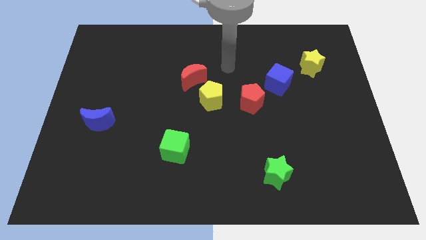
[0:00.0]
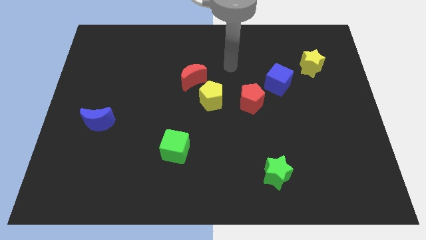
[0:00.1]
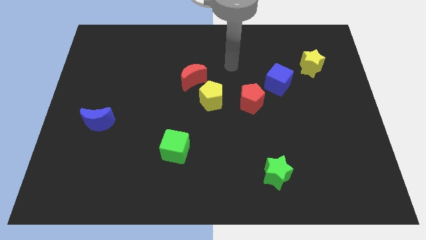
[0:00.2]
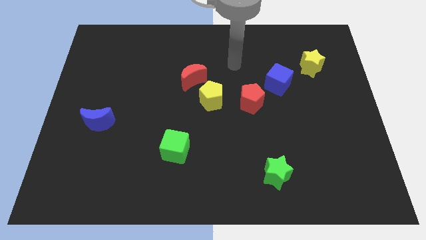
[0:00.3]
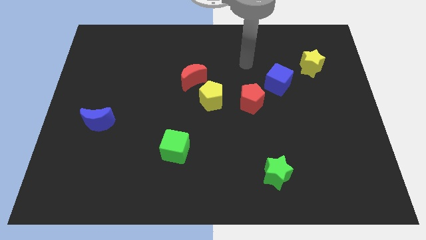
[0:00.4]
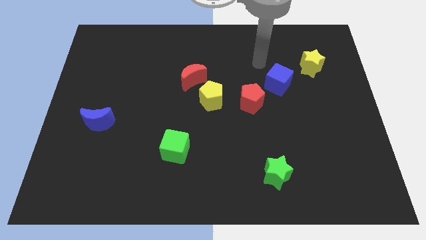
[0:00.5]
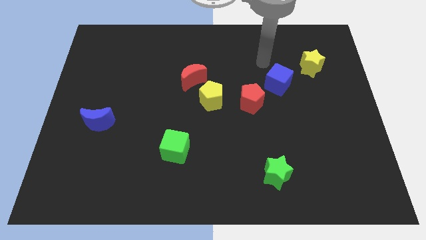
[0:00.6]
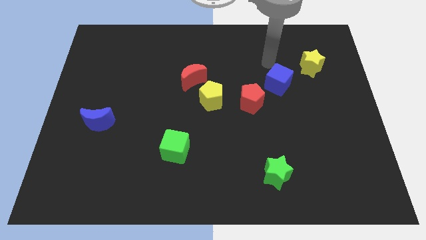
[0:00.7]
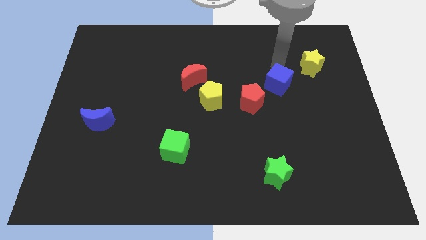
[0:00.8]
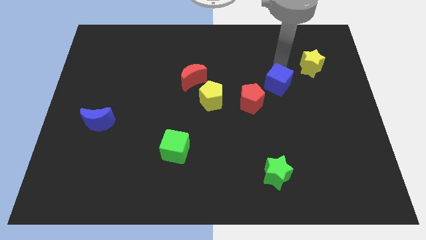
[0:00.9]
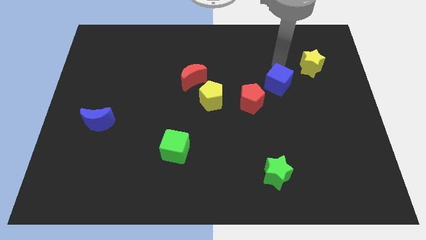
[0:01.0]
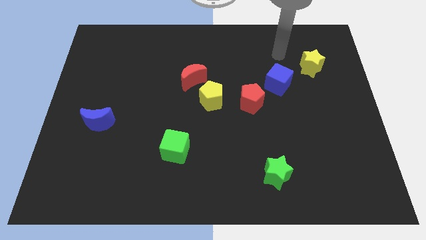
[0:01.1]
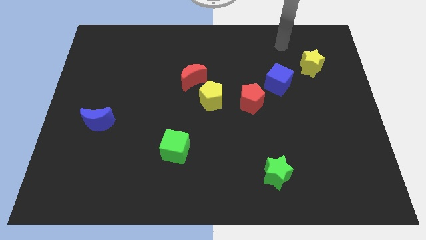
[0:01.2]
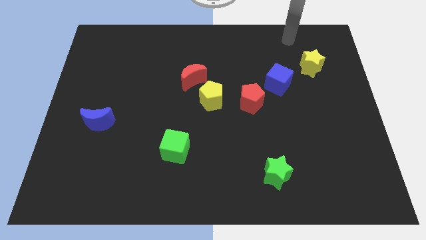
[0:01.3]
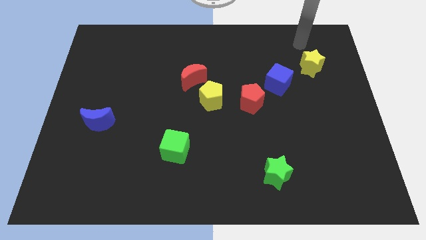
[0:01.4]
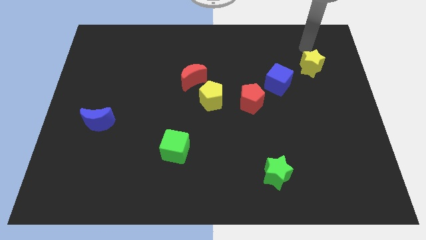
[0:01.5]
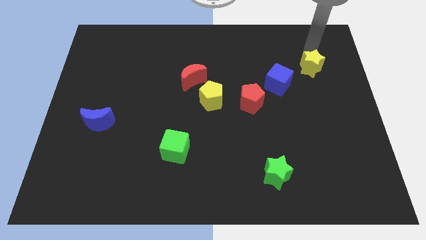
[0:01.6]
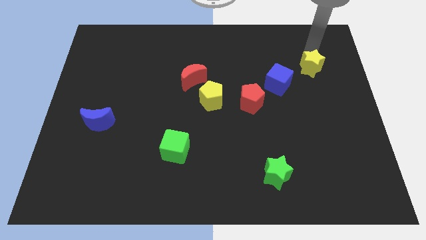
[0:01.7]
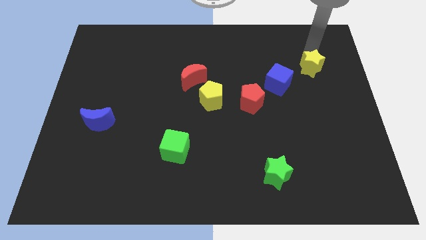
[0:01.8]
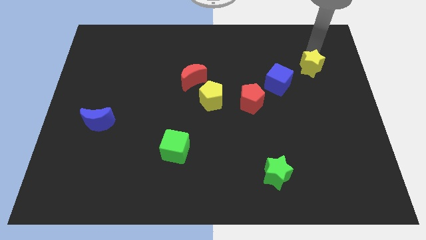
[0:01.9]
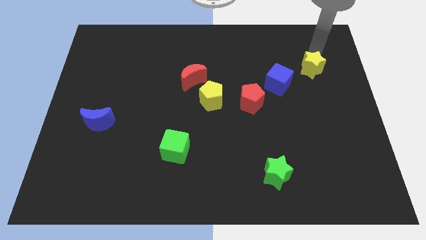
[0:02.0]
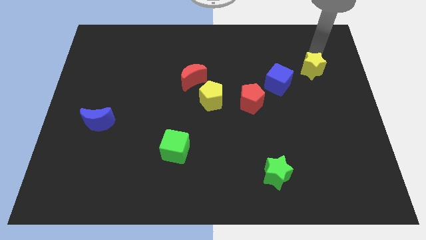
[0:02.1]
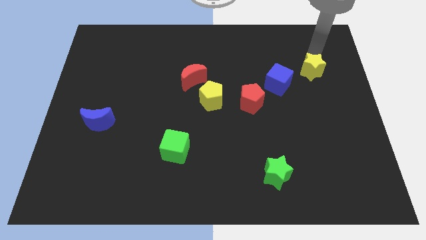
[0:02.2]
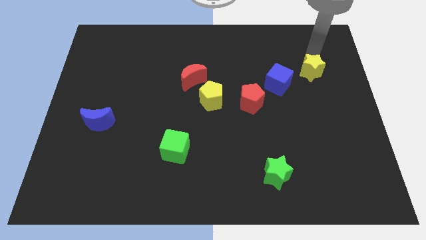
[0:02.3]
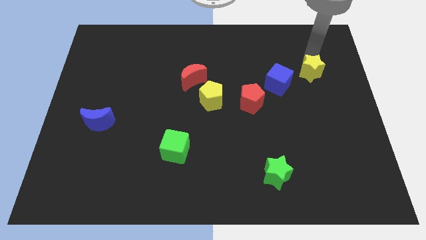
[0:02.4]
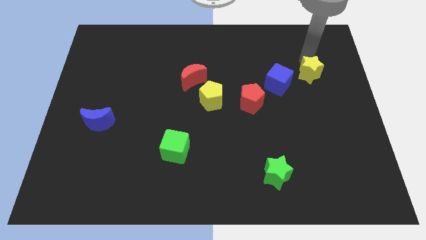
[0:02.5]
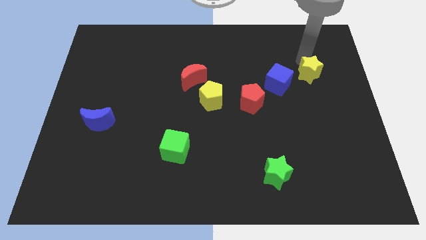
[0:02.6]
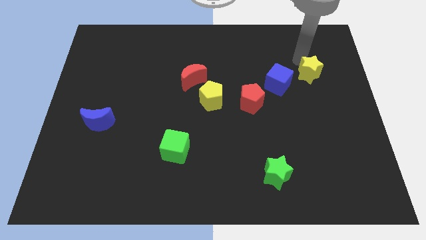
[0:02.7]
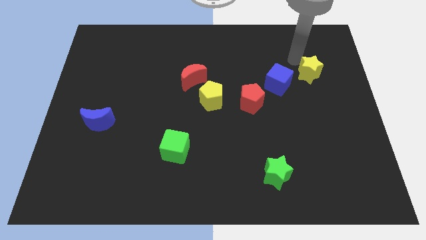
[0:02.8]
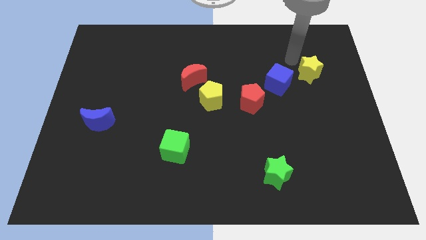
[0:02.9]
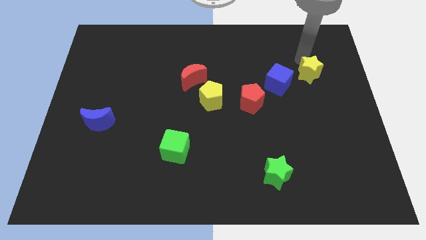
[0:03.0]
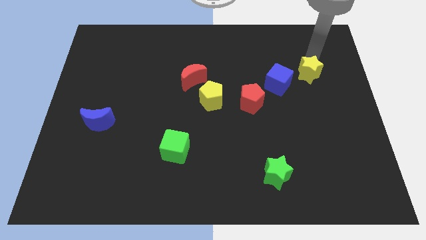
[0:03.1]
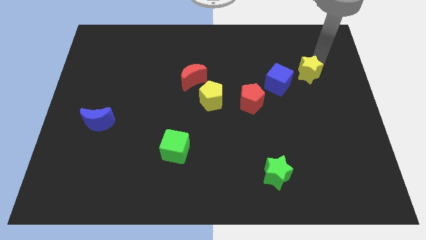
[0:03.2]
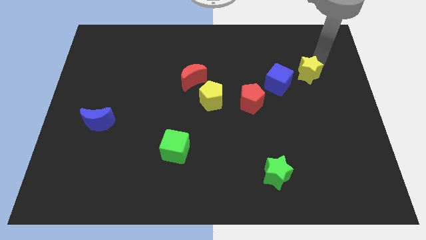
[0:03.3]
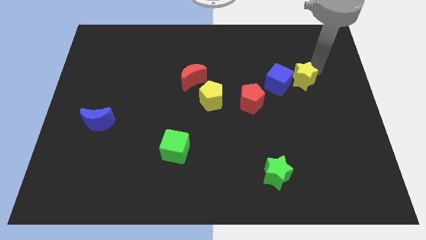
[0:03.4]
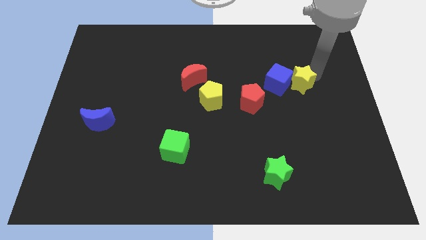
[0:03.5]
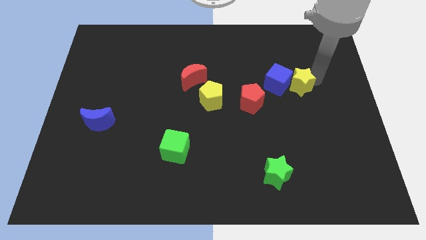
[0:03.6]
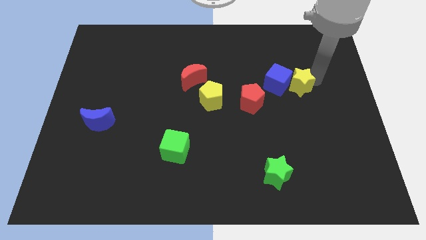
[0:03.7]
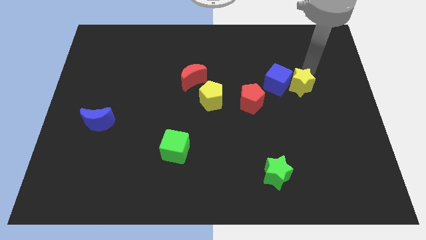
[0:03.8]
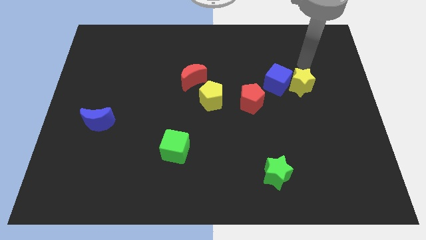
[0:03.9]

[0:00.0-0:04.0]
place the yellow star right to the blue cube

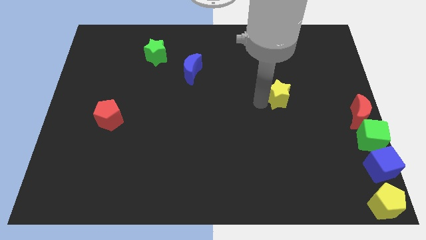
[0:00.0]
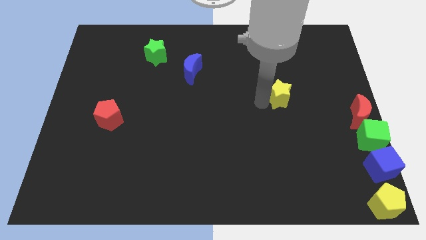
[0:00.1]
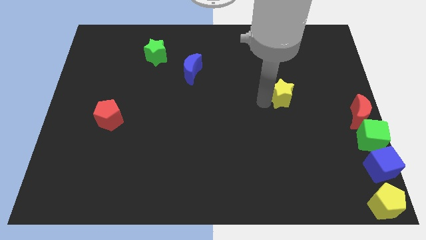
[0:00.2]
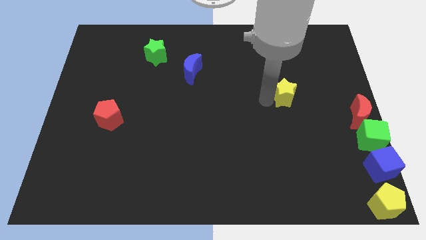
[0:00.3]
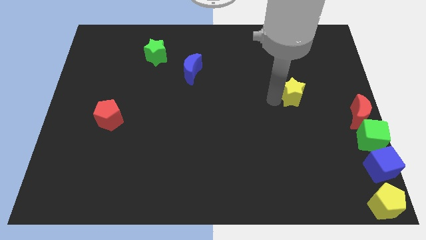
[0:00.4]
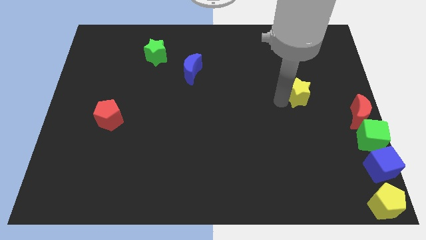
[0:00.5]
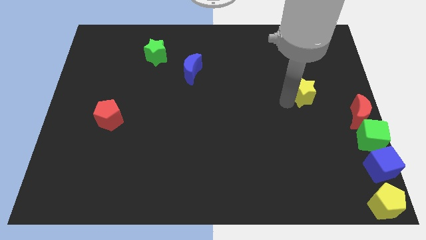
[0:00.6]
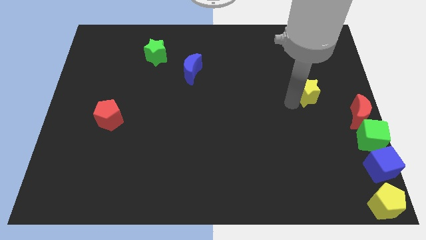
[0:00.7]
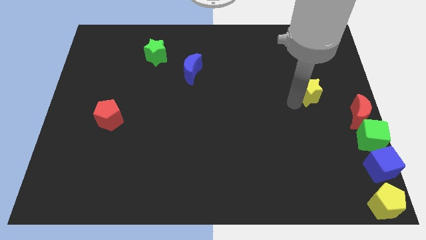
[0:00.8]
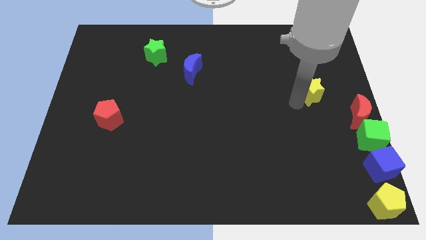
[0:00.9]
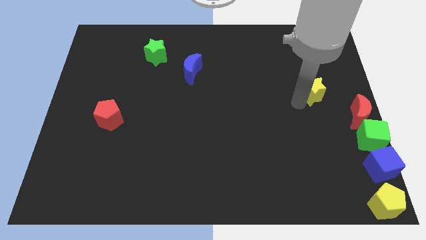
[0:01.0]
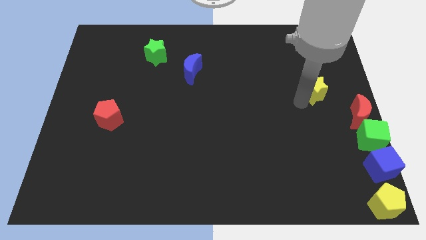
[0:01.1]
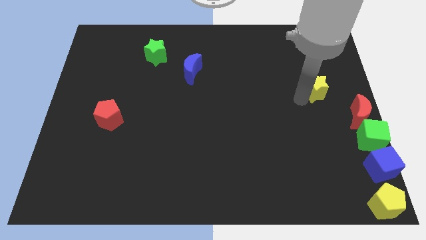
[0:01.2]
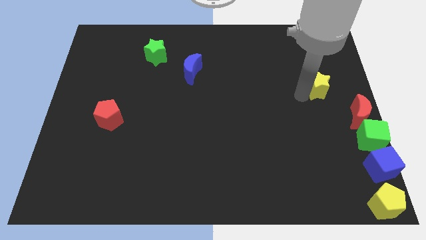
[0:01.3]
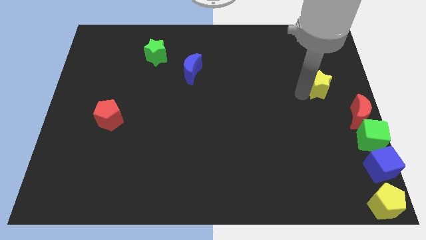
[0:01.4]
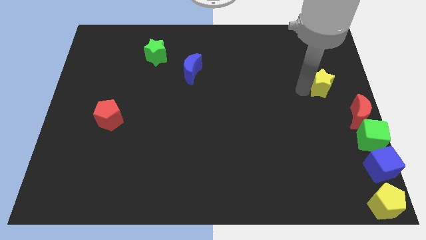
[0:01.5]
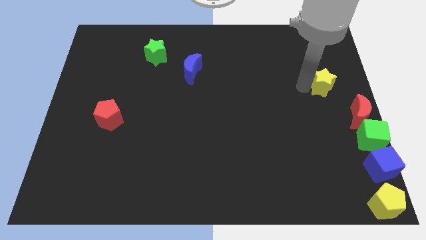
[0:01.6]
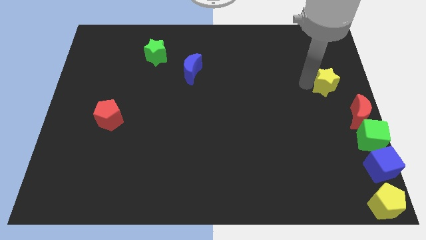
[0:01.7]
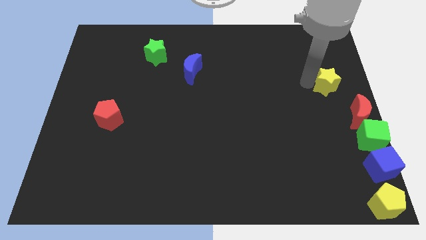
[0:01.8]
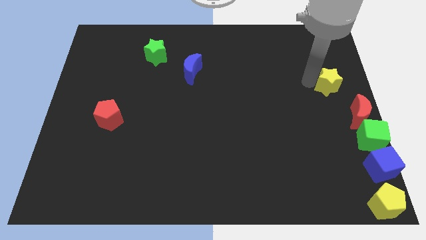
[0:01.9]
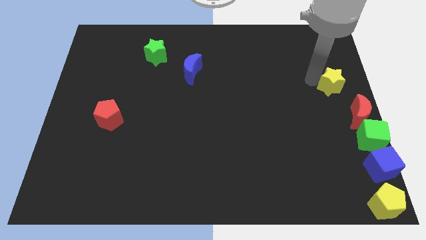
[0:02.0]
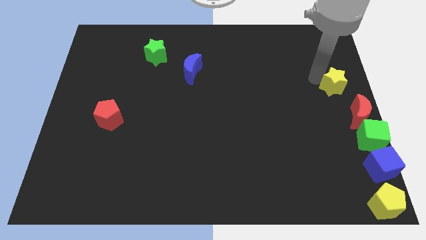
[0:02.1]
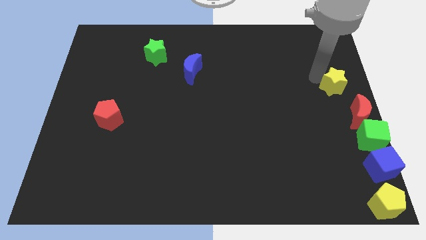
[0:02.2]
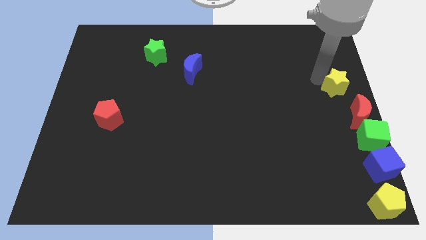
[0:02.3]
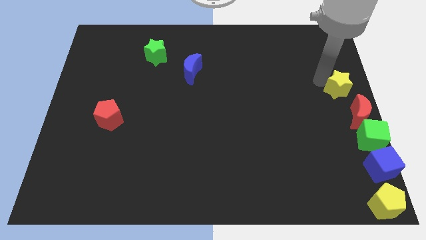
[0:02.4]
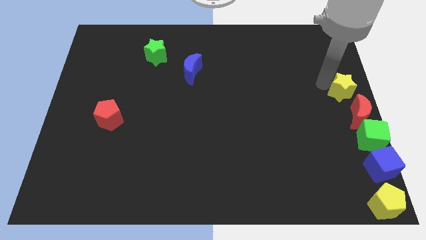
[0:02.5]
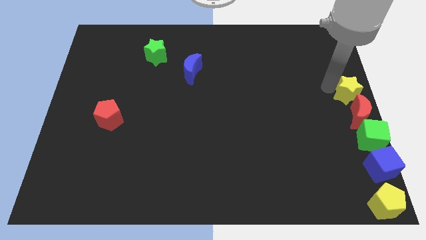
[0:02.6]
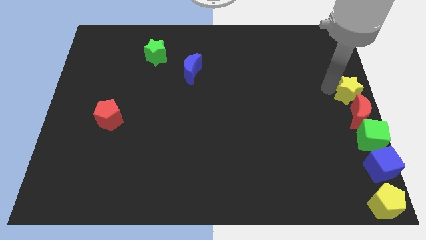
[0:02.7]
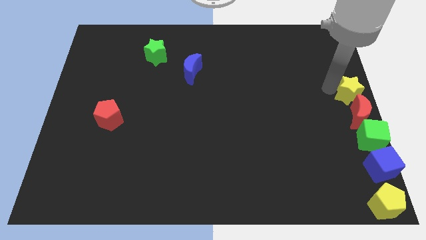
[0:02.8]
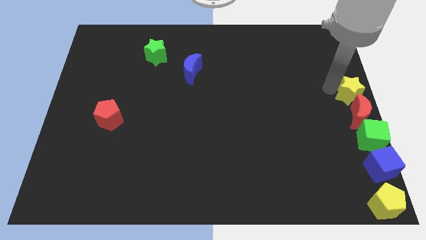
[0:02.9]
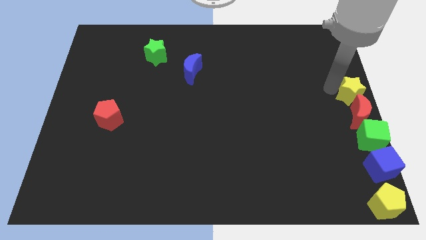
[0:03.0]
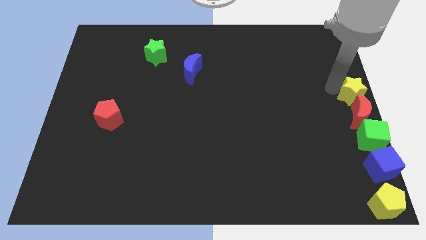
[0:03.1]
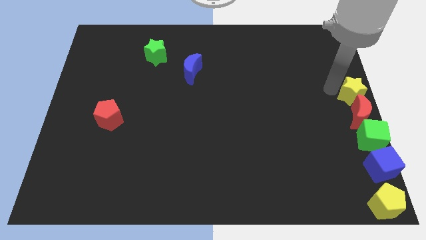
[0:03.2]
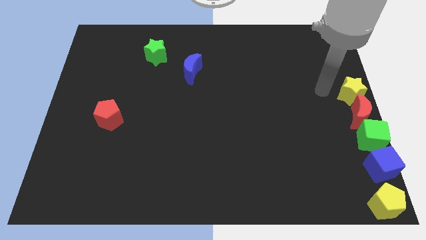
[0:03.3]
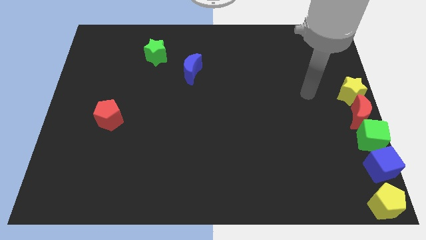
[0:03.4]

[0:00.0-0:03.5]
place the yellow star at the top of the red crescent

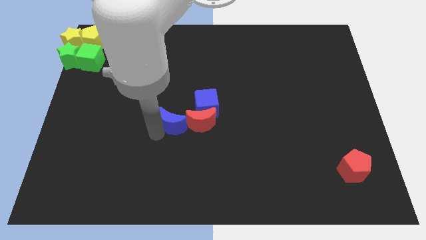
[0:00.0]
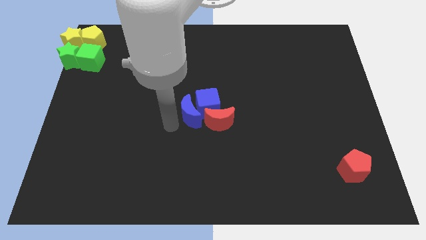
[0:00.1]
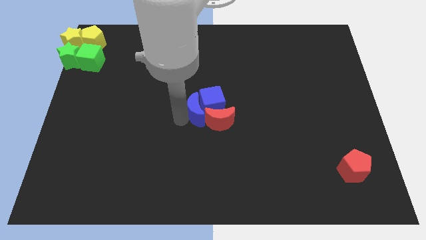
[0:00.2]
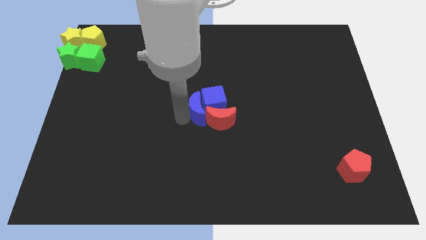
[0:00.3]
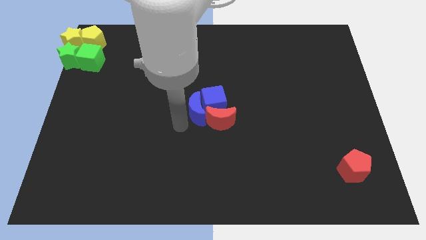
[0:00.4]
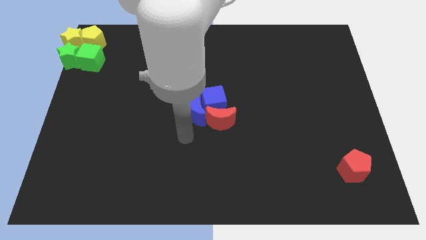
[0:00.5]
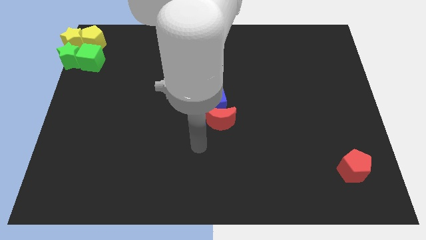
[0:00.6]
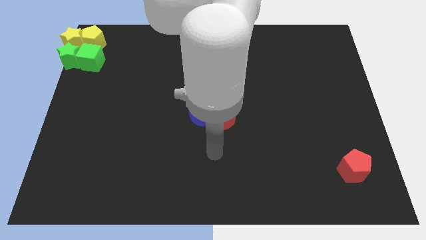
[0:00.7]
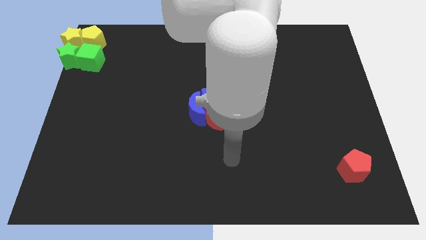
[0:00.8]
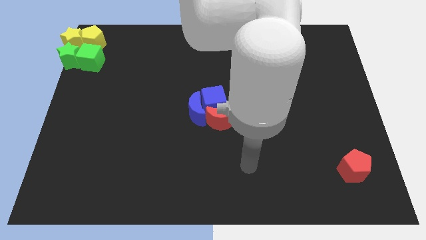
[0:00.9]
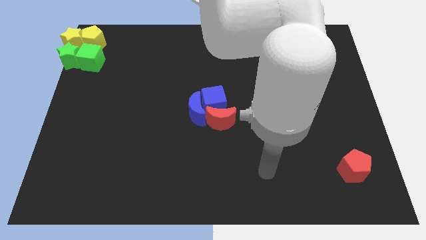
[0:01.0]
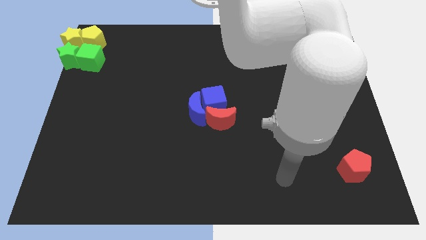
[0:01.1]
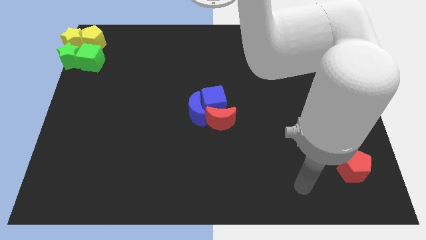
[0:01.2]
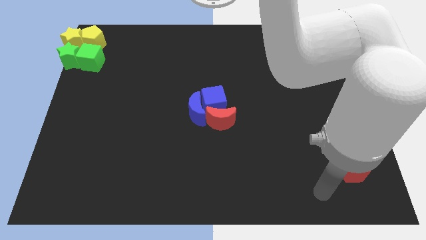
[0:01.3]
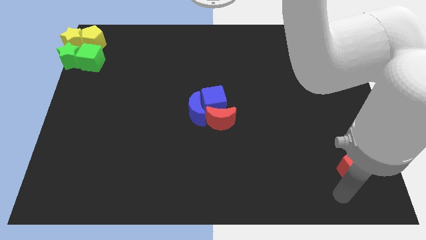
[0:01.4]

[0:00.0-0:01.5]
place both the blue blocks and red crescent at the center of the board
